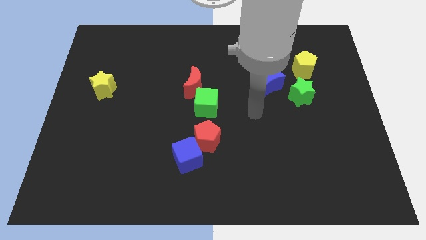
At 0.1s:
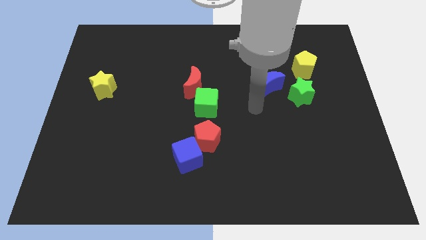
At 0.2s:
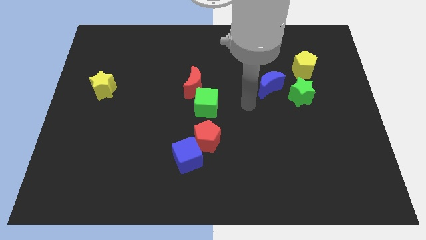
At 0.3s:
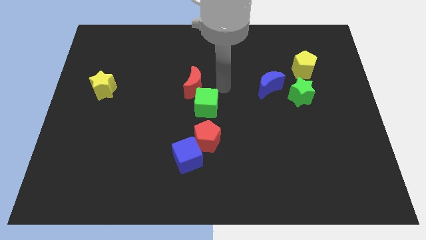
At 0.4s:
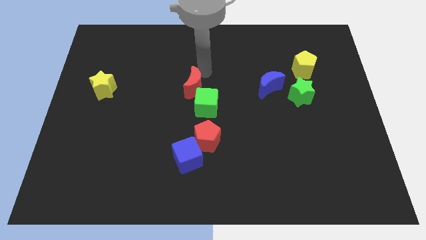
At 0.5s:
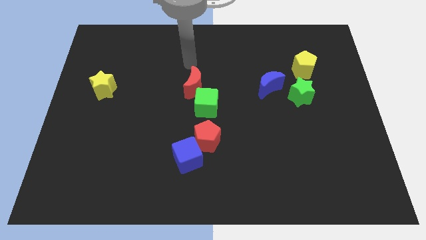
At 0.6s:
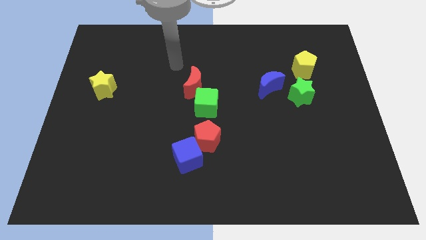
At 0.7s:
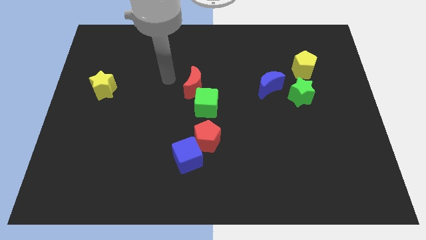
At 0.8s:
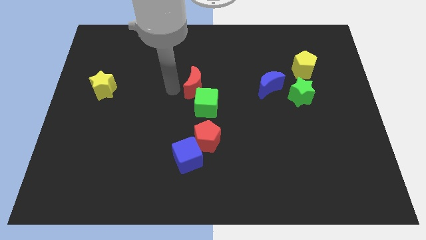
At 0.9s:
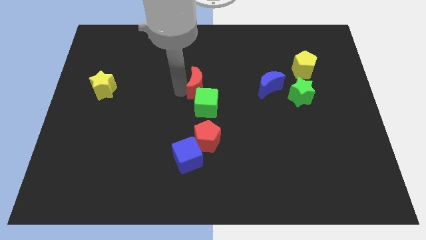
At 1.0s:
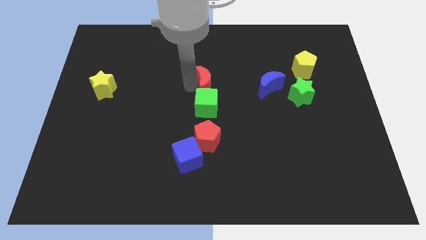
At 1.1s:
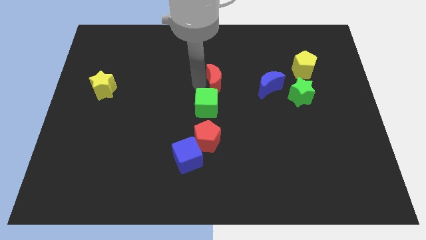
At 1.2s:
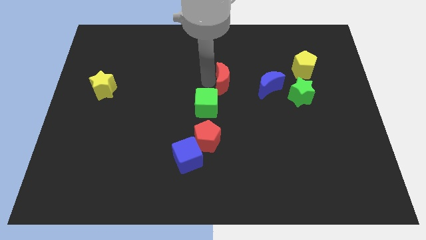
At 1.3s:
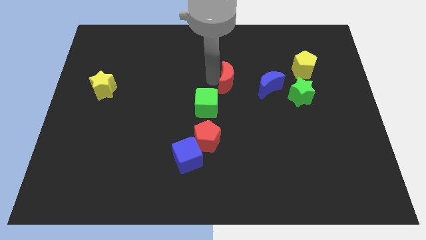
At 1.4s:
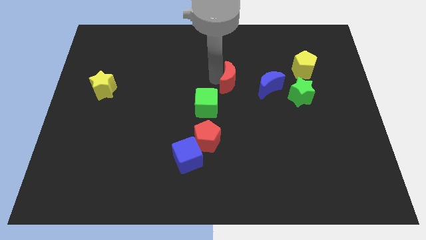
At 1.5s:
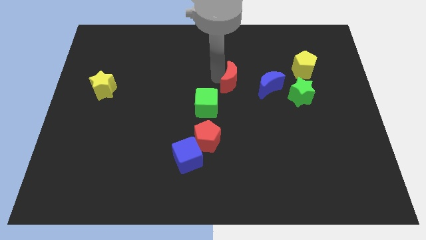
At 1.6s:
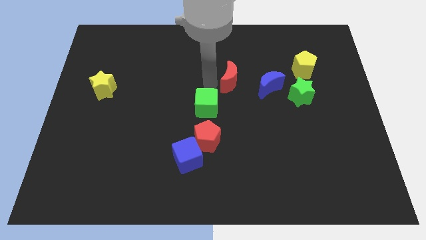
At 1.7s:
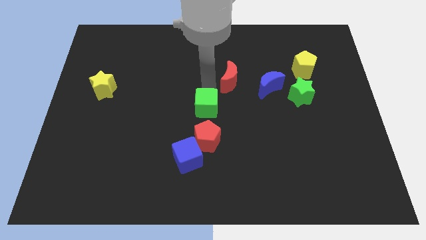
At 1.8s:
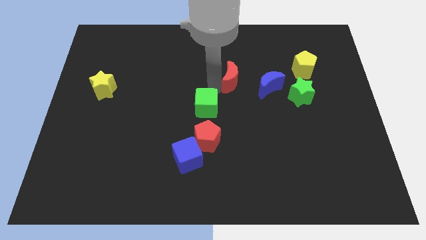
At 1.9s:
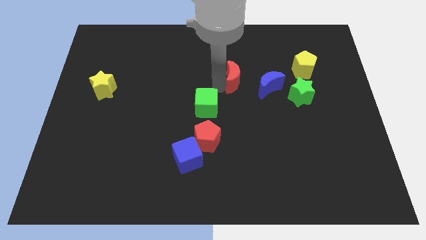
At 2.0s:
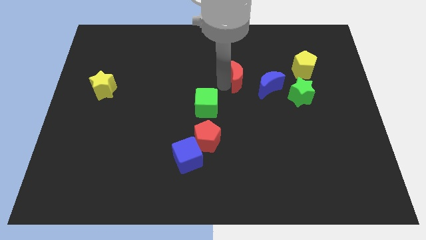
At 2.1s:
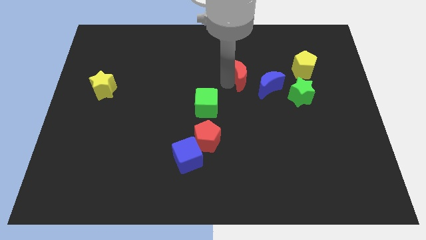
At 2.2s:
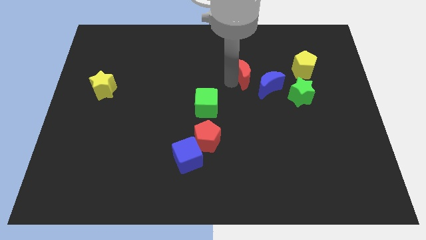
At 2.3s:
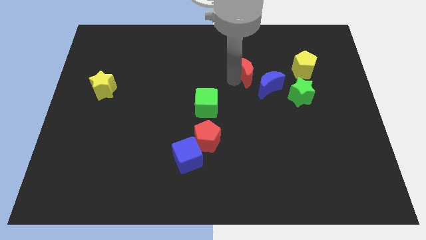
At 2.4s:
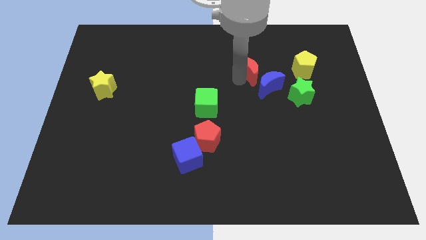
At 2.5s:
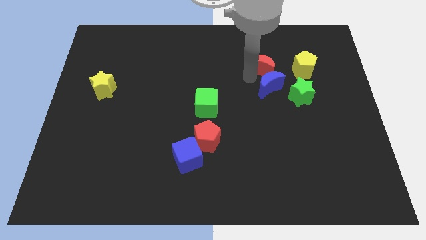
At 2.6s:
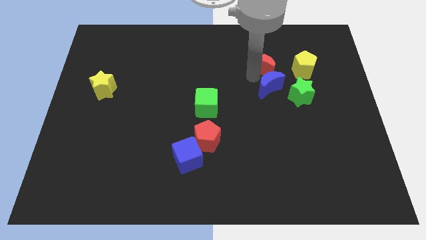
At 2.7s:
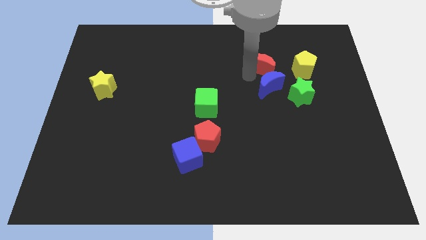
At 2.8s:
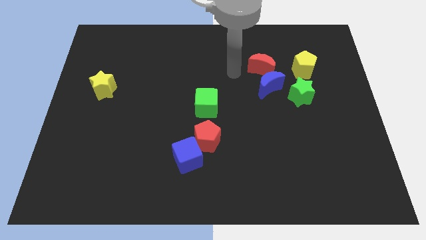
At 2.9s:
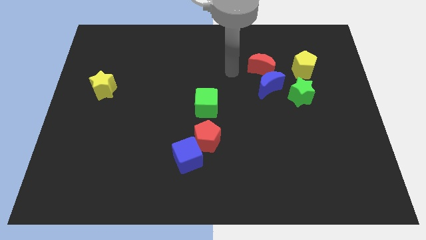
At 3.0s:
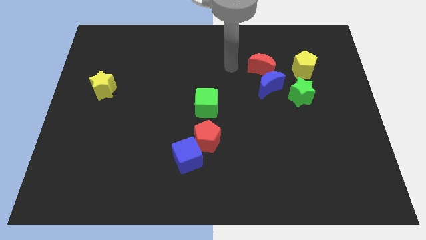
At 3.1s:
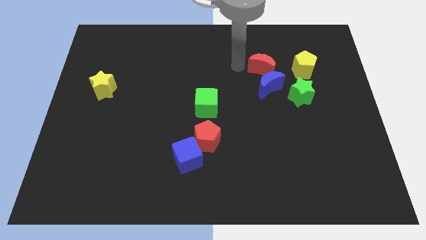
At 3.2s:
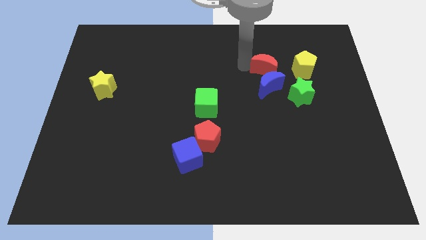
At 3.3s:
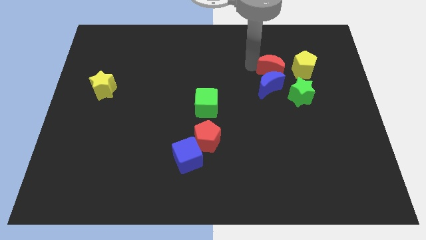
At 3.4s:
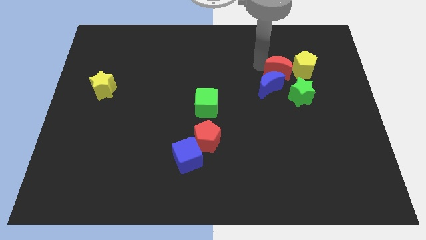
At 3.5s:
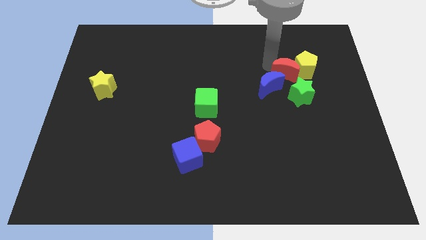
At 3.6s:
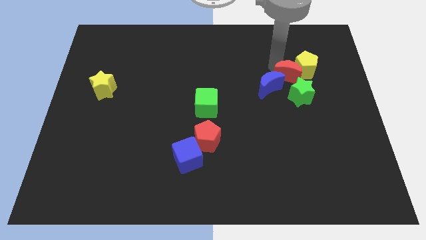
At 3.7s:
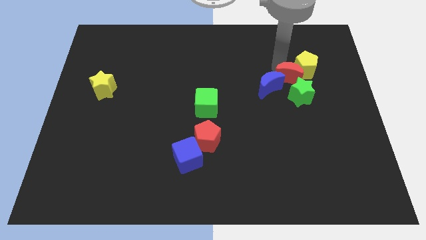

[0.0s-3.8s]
put the red moon close to the yellow pentagon

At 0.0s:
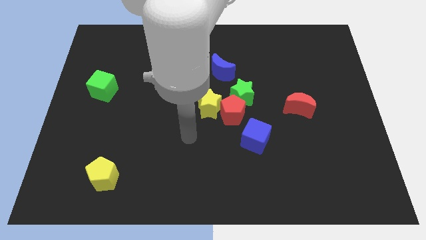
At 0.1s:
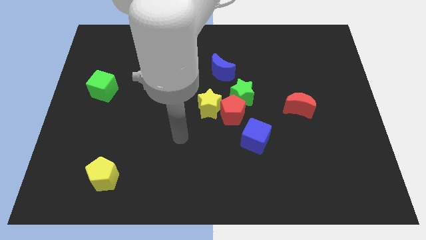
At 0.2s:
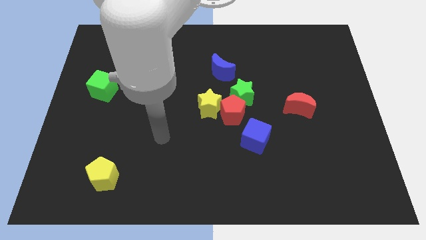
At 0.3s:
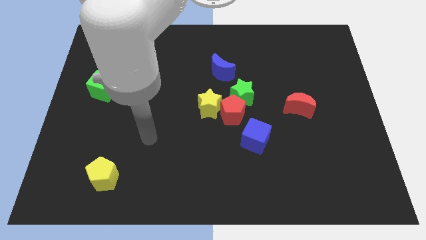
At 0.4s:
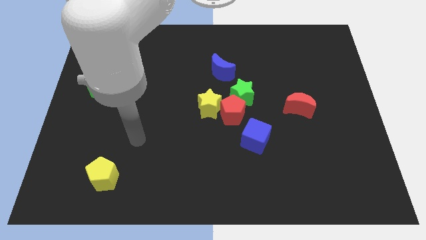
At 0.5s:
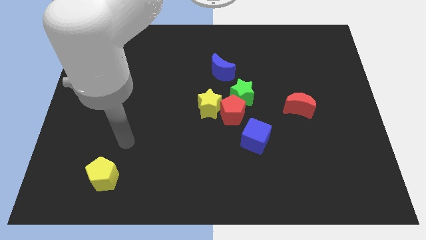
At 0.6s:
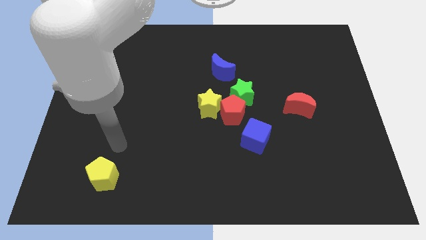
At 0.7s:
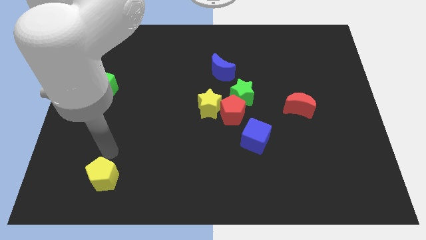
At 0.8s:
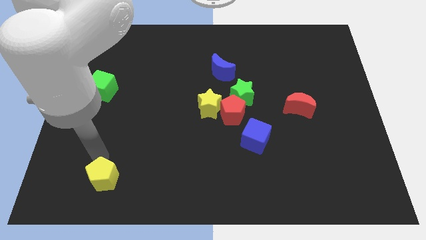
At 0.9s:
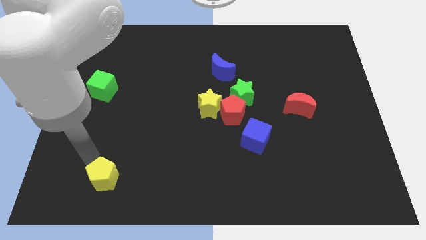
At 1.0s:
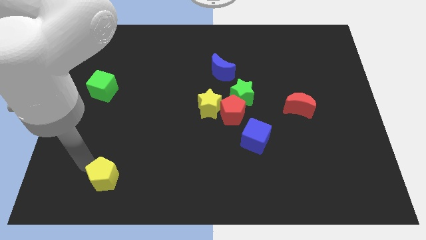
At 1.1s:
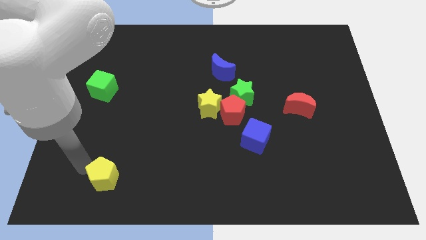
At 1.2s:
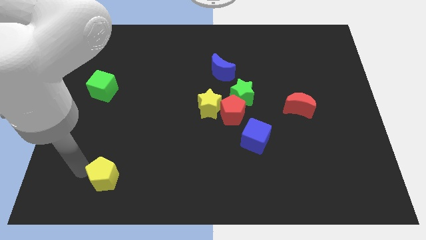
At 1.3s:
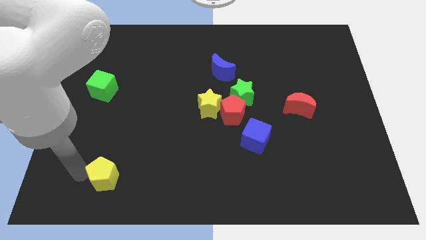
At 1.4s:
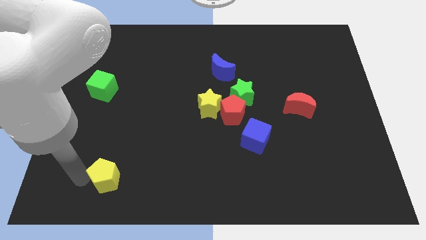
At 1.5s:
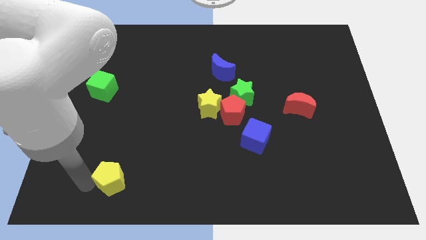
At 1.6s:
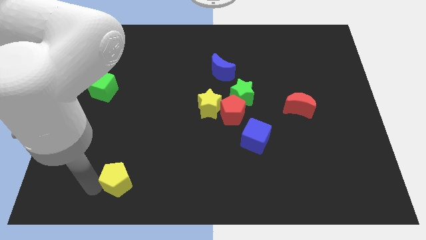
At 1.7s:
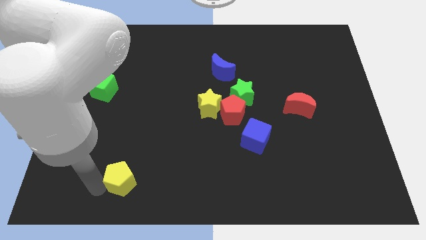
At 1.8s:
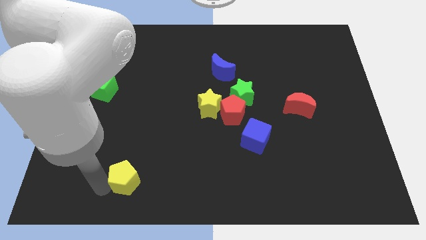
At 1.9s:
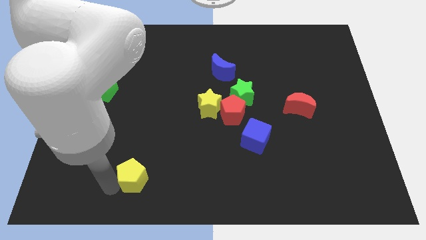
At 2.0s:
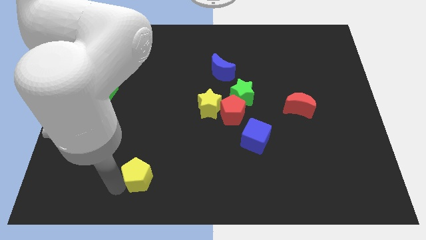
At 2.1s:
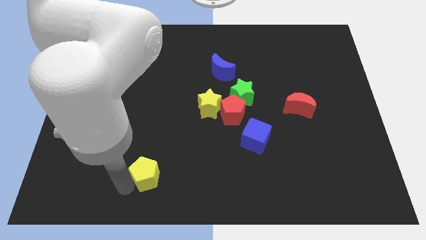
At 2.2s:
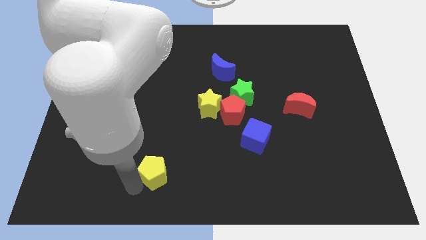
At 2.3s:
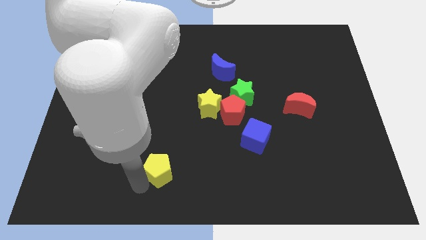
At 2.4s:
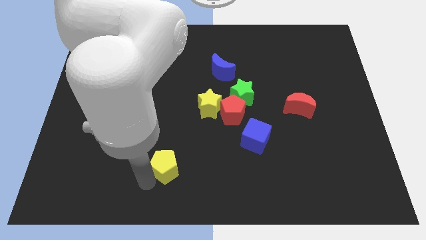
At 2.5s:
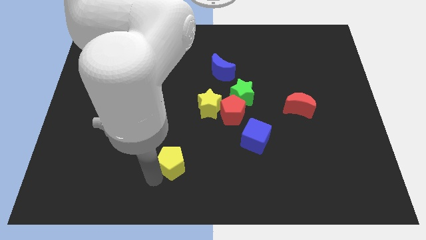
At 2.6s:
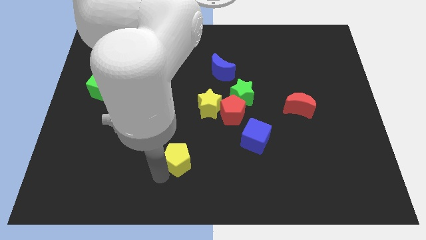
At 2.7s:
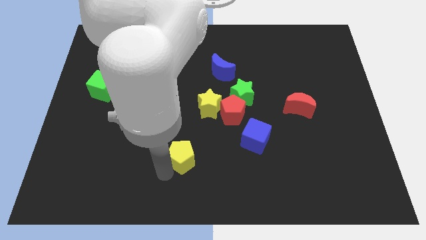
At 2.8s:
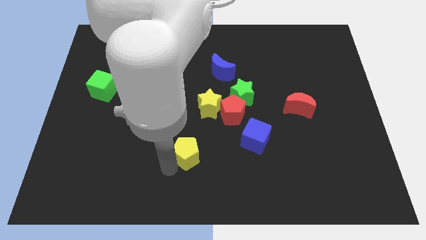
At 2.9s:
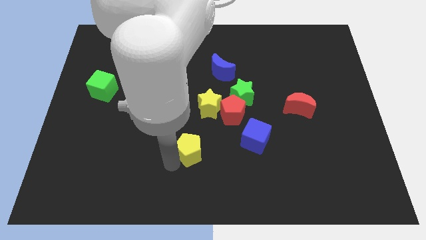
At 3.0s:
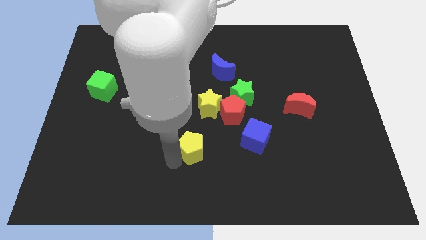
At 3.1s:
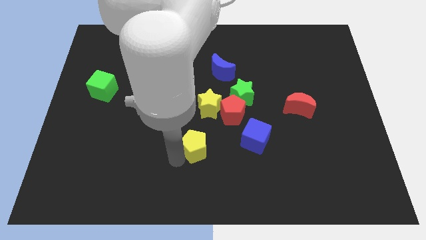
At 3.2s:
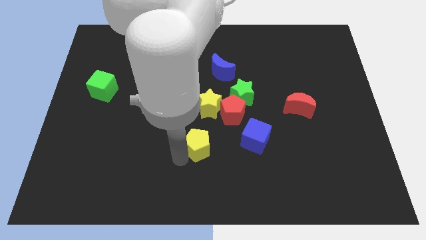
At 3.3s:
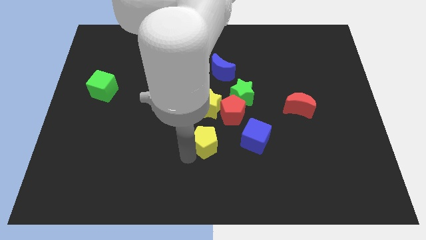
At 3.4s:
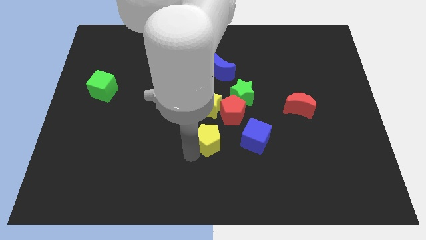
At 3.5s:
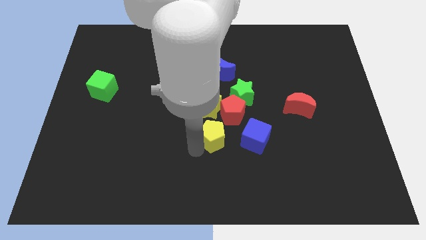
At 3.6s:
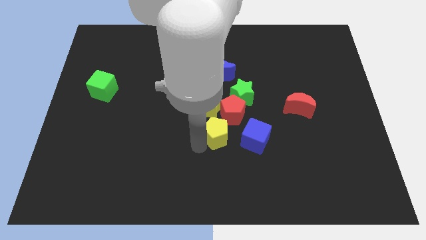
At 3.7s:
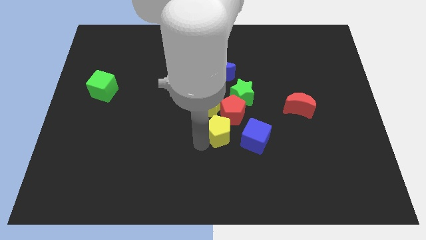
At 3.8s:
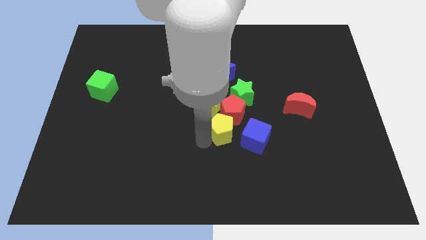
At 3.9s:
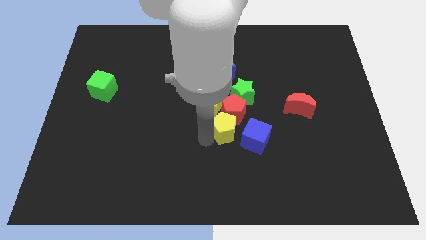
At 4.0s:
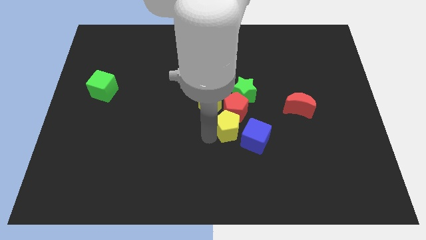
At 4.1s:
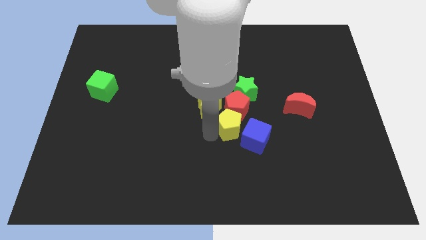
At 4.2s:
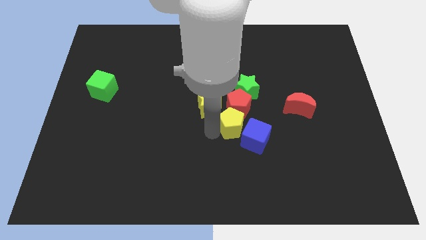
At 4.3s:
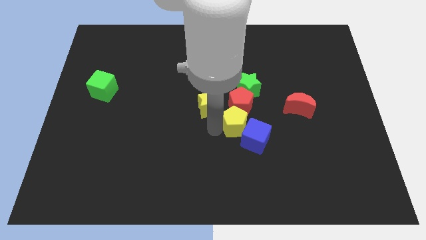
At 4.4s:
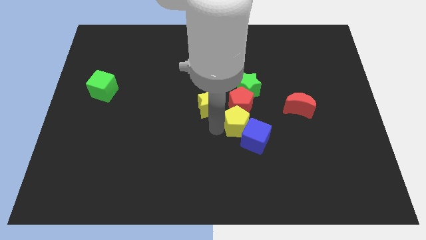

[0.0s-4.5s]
put the yellow pentagon to the blue cube

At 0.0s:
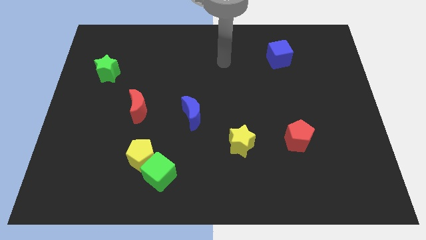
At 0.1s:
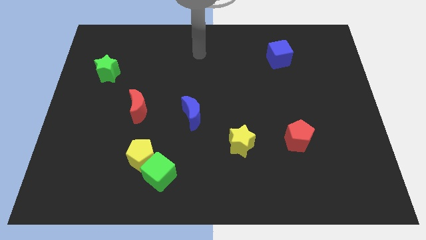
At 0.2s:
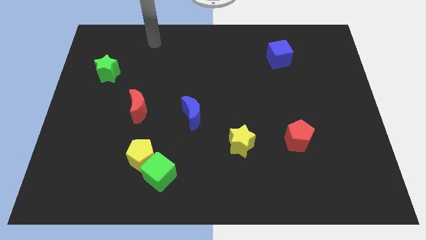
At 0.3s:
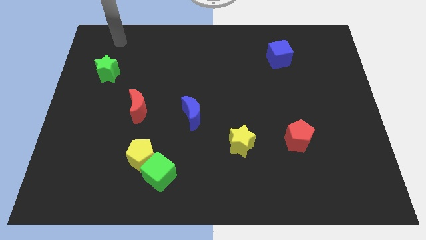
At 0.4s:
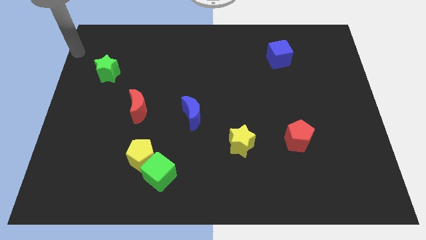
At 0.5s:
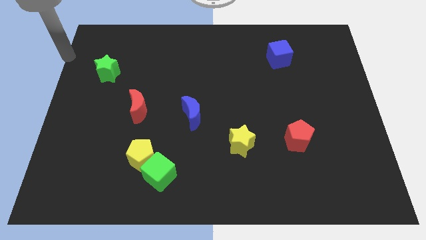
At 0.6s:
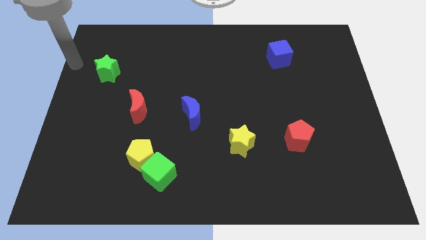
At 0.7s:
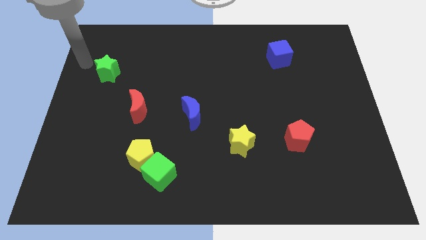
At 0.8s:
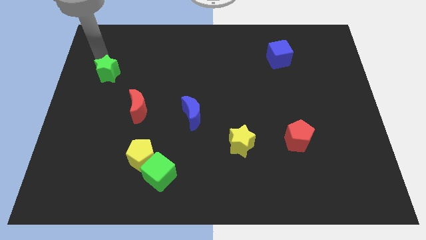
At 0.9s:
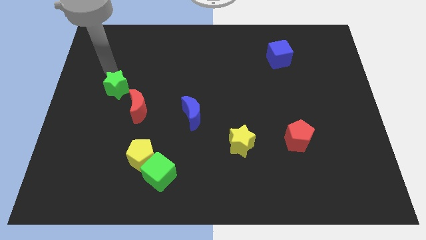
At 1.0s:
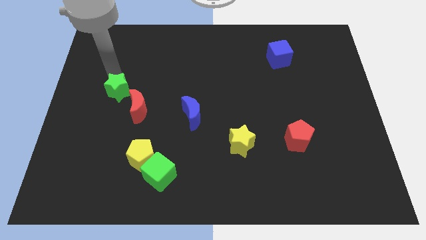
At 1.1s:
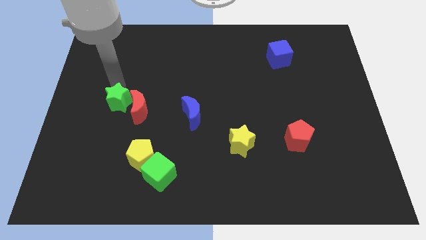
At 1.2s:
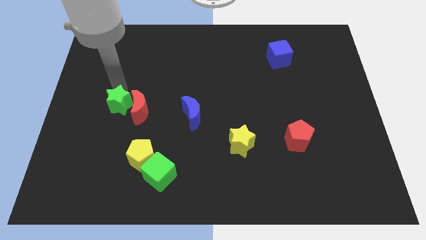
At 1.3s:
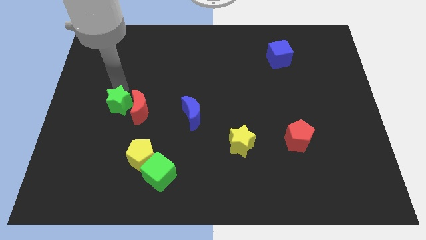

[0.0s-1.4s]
put the green star towards the red moon
